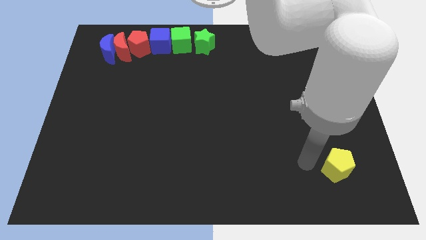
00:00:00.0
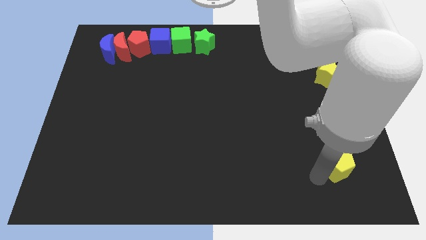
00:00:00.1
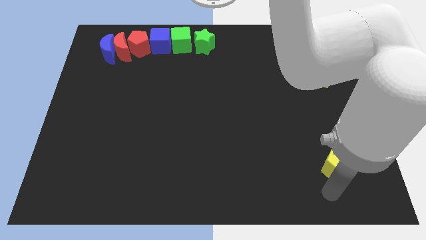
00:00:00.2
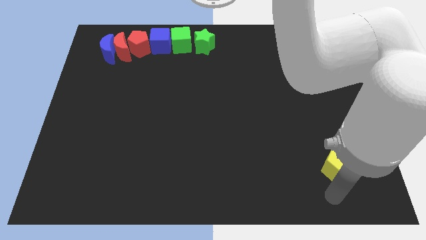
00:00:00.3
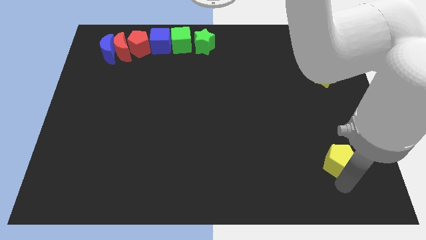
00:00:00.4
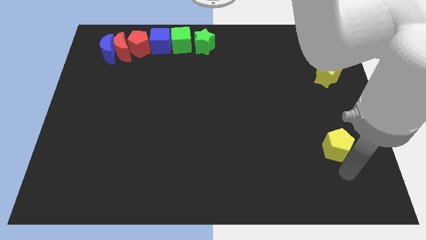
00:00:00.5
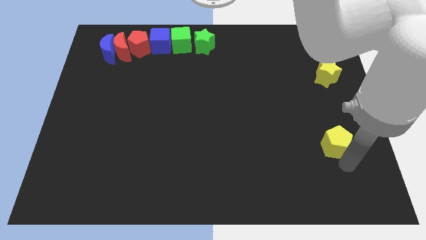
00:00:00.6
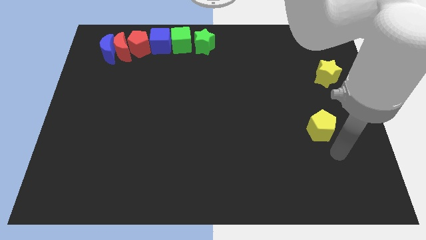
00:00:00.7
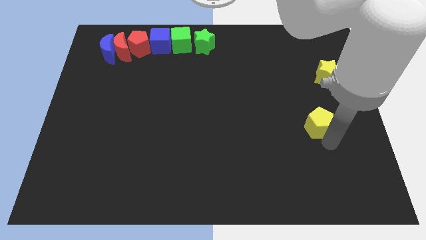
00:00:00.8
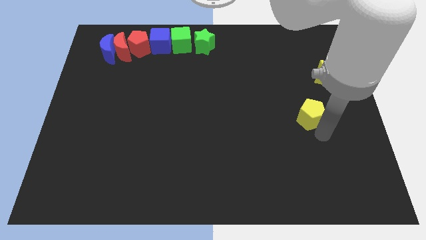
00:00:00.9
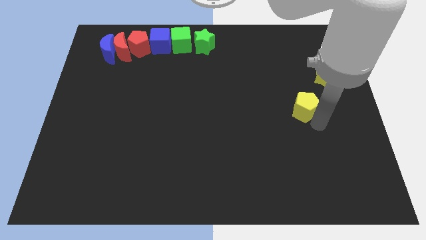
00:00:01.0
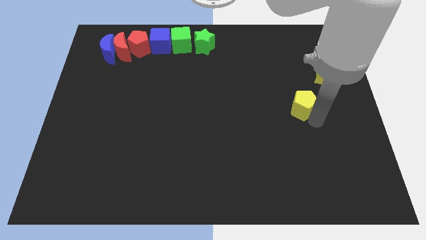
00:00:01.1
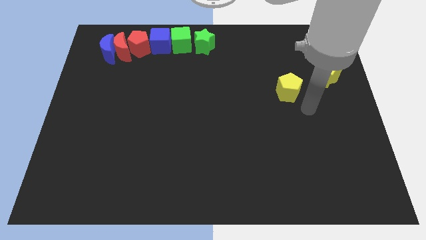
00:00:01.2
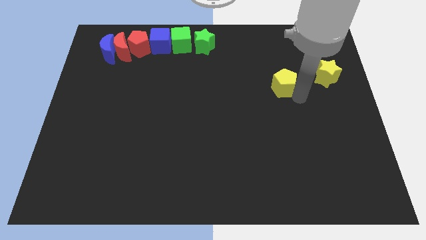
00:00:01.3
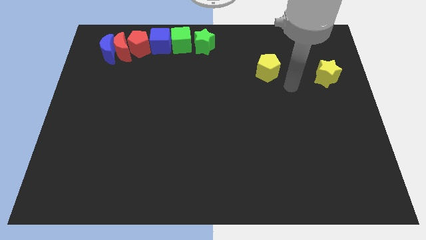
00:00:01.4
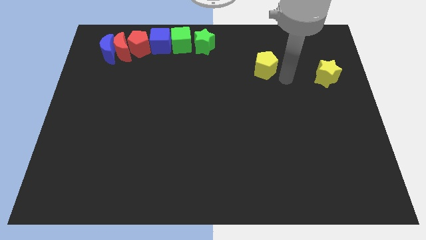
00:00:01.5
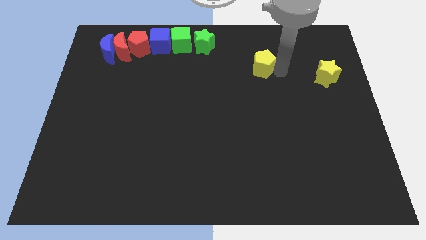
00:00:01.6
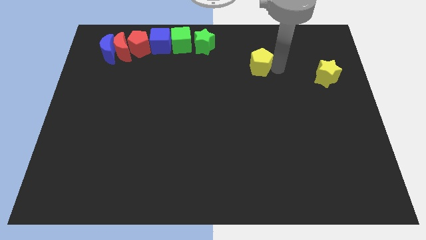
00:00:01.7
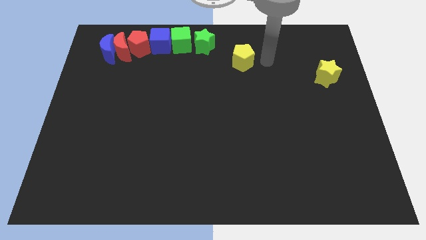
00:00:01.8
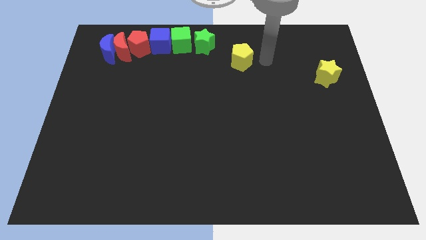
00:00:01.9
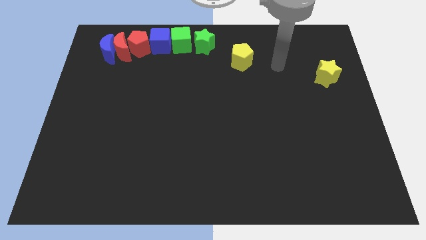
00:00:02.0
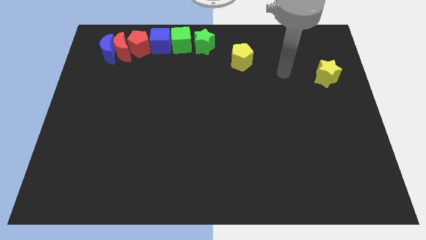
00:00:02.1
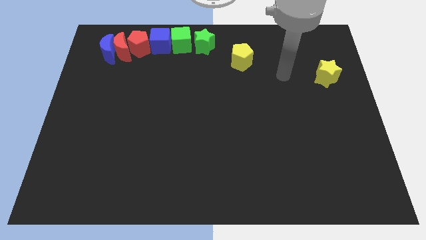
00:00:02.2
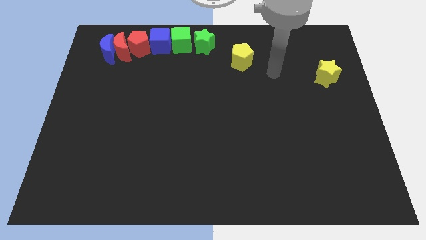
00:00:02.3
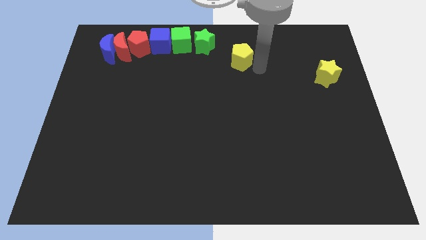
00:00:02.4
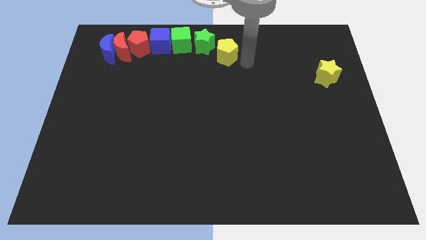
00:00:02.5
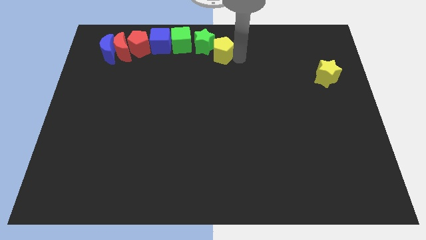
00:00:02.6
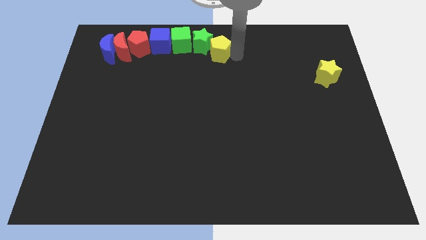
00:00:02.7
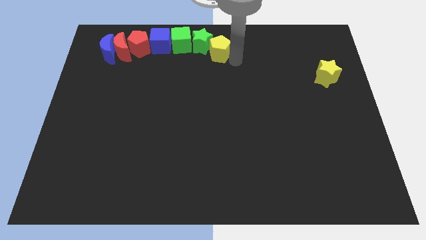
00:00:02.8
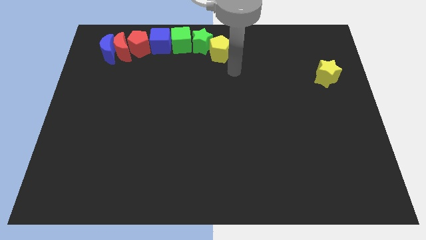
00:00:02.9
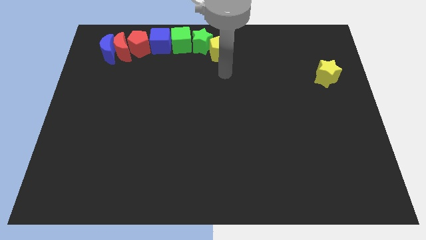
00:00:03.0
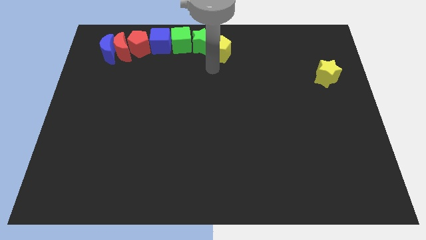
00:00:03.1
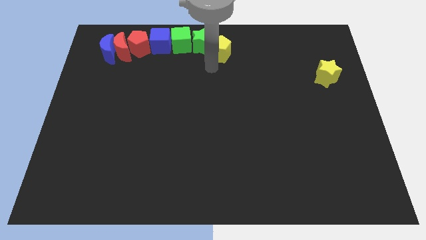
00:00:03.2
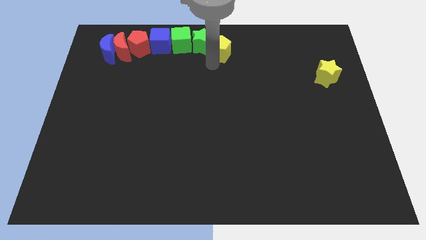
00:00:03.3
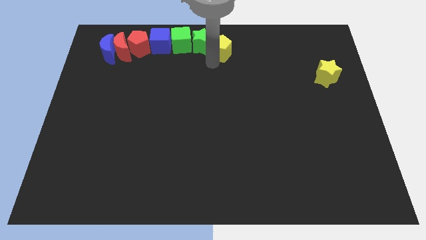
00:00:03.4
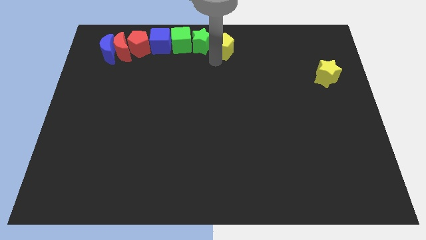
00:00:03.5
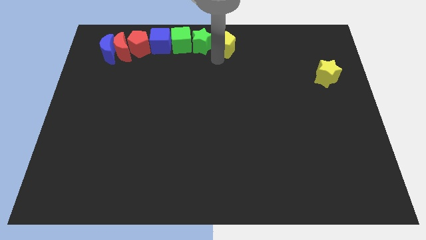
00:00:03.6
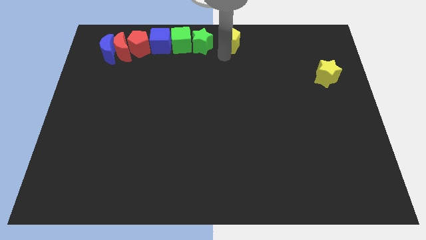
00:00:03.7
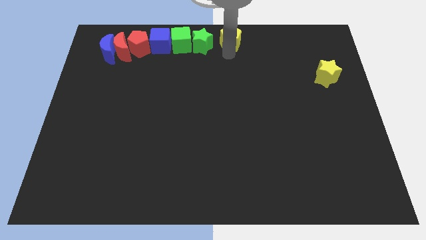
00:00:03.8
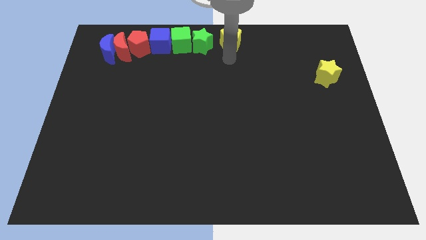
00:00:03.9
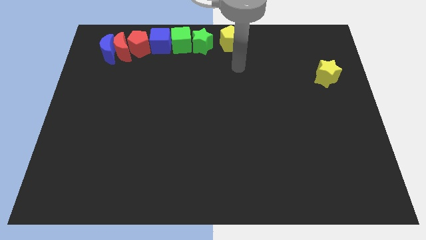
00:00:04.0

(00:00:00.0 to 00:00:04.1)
place yellow pentagon right to green star

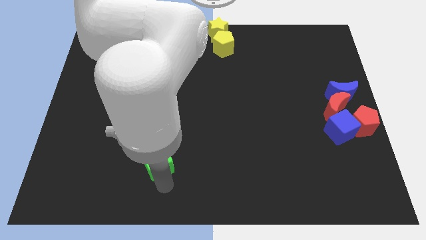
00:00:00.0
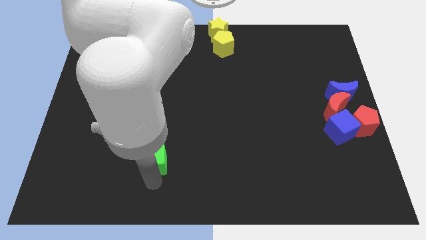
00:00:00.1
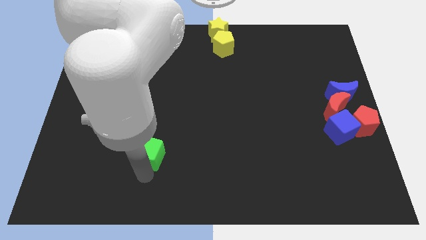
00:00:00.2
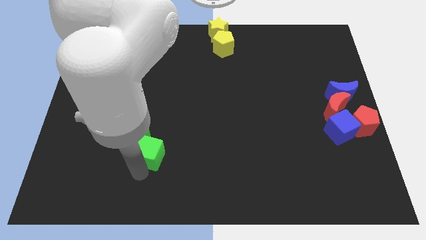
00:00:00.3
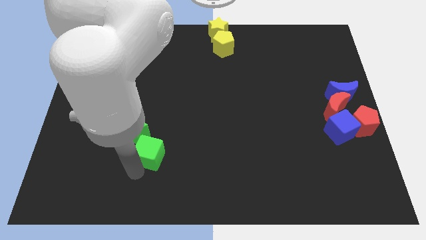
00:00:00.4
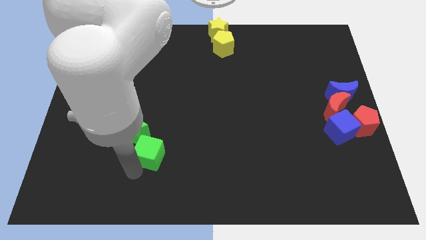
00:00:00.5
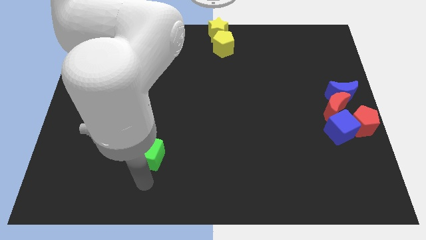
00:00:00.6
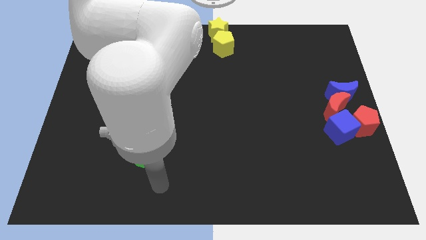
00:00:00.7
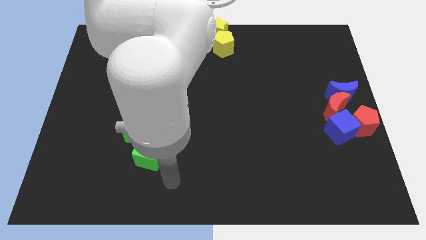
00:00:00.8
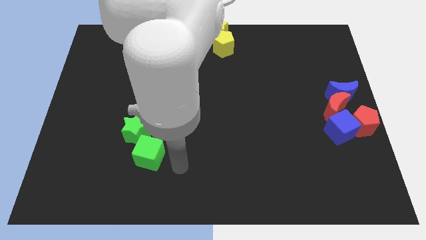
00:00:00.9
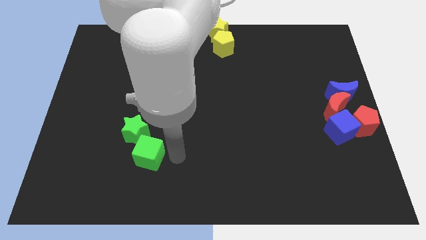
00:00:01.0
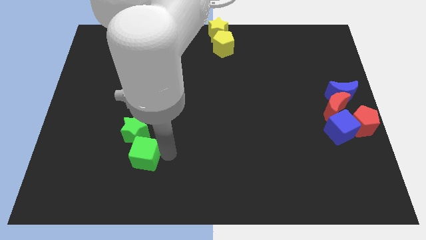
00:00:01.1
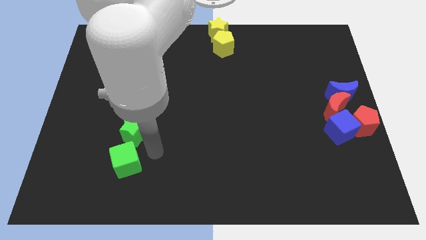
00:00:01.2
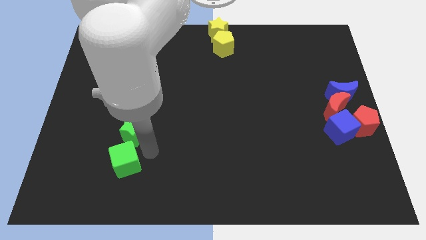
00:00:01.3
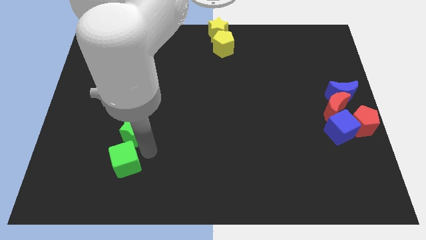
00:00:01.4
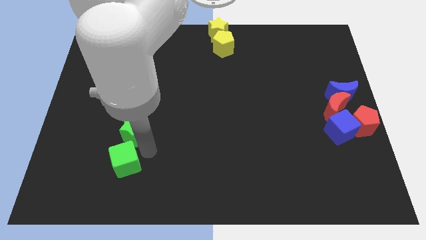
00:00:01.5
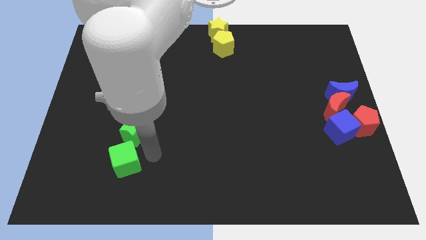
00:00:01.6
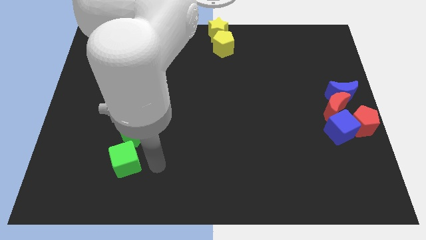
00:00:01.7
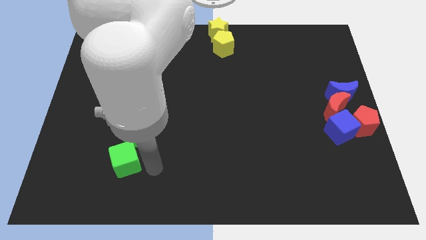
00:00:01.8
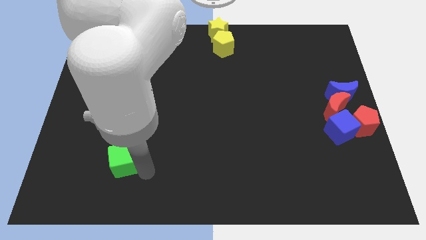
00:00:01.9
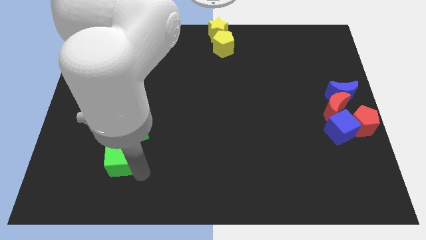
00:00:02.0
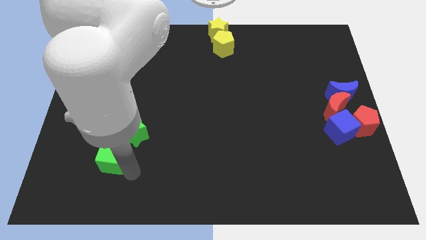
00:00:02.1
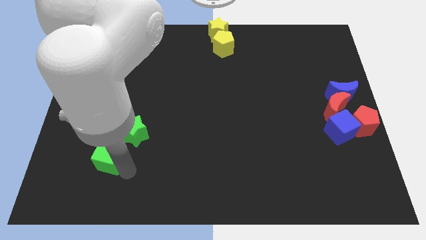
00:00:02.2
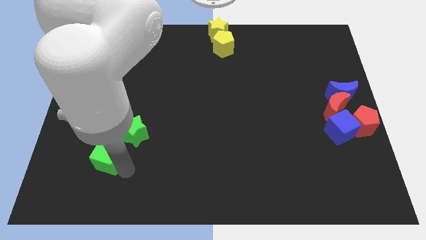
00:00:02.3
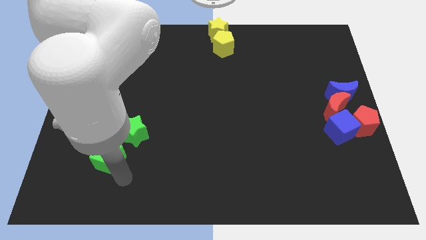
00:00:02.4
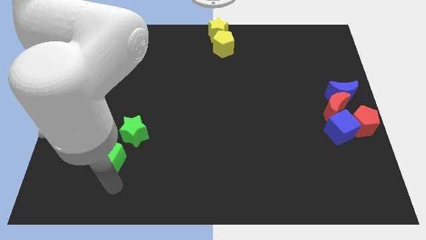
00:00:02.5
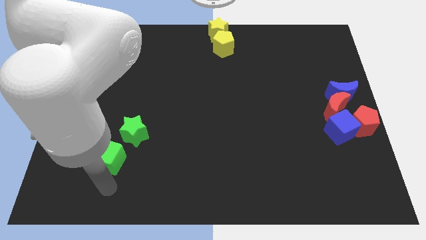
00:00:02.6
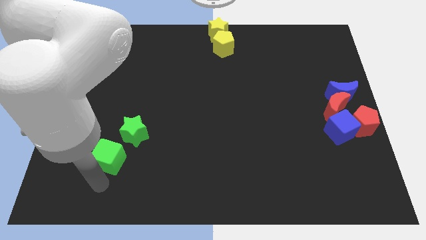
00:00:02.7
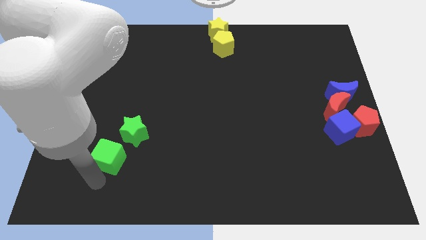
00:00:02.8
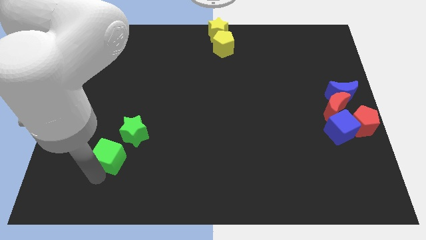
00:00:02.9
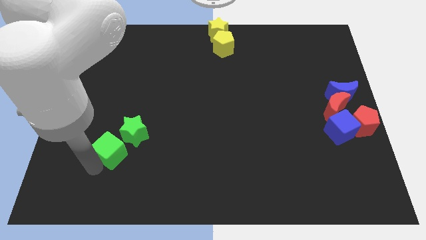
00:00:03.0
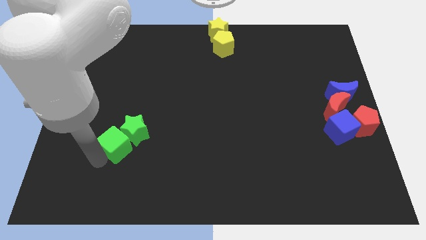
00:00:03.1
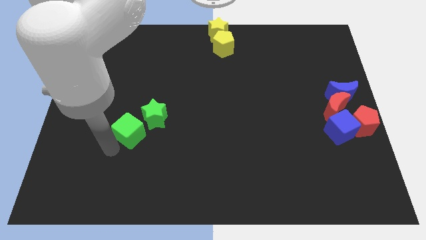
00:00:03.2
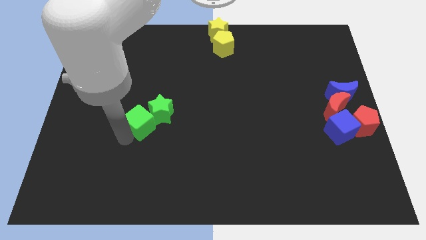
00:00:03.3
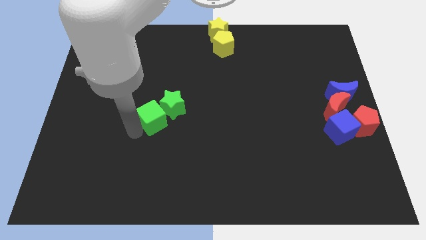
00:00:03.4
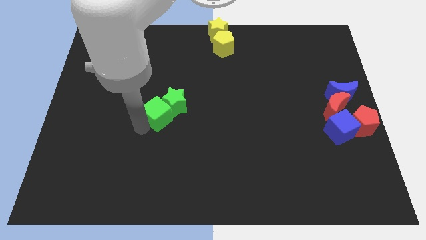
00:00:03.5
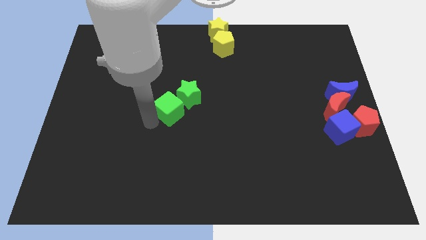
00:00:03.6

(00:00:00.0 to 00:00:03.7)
push the green cube into the green star

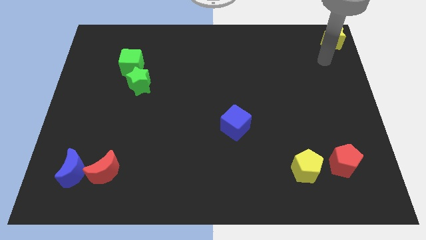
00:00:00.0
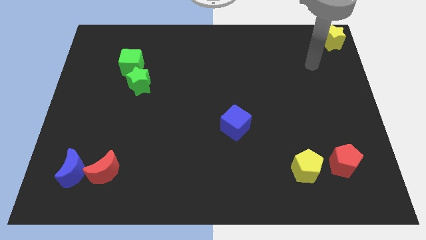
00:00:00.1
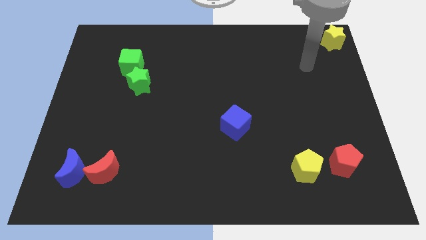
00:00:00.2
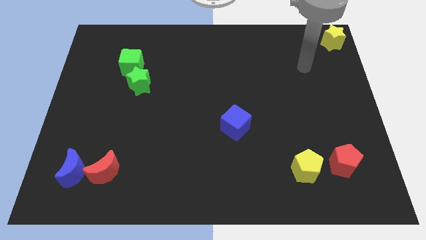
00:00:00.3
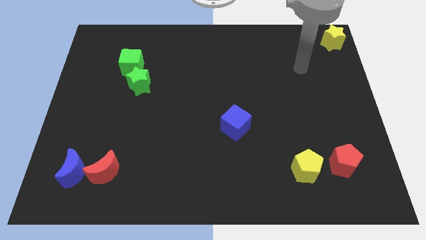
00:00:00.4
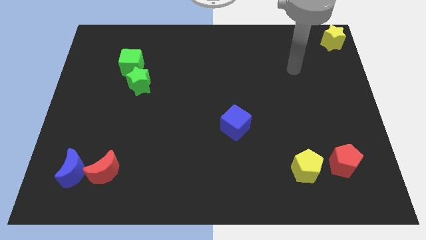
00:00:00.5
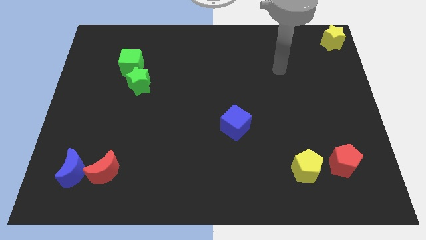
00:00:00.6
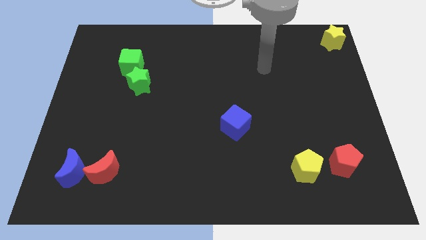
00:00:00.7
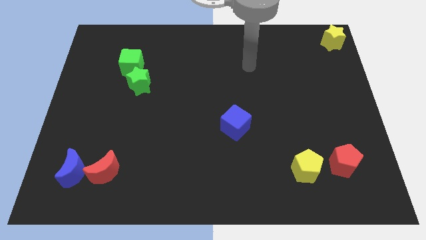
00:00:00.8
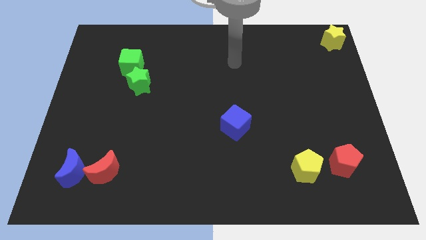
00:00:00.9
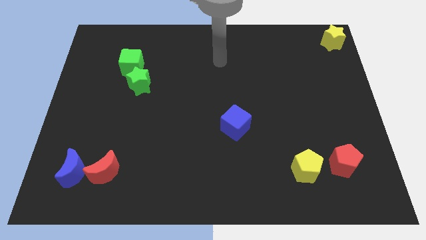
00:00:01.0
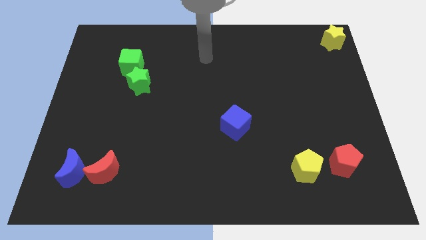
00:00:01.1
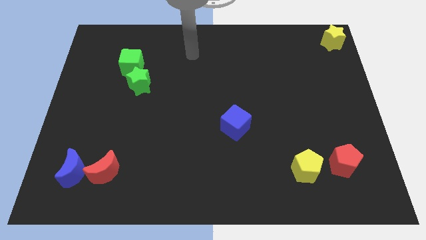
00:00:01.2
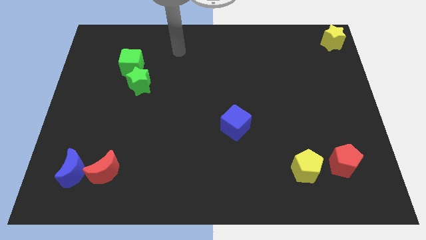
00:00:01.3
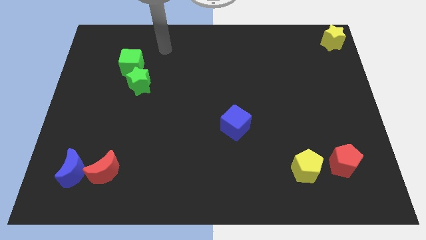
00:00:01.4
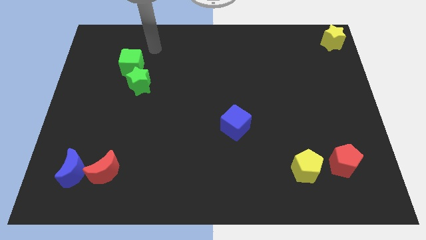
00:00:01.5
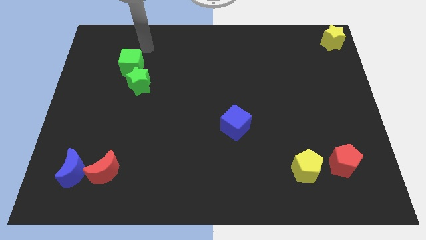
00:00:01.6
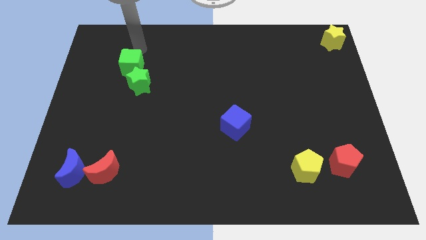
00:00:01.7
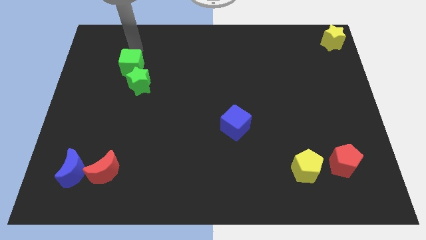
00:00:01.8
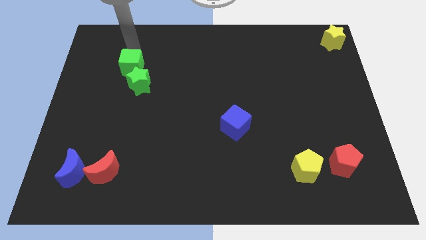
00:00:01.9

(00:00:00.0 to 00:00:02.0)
move your arm away from the yellow star
